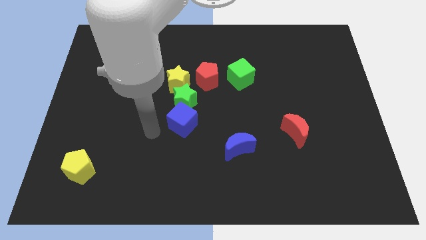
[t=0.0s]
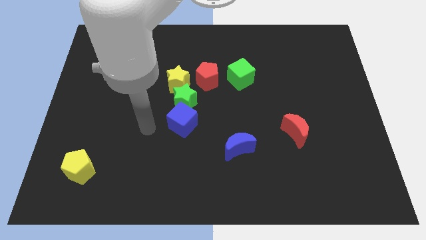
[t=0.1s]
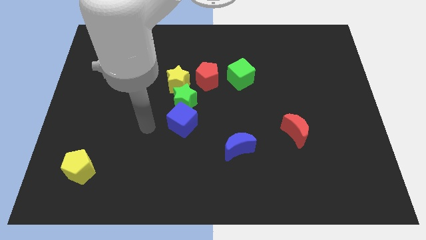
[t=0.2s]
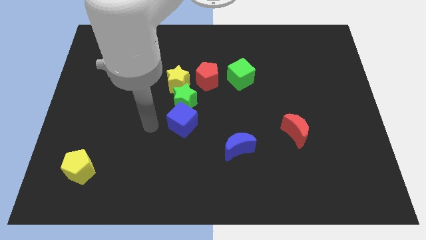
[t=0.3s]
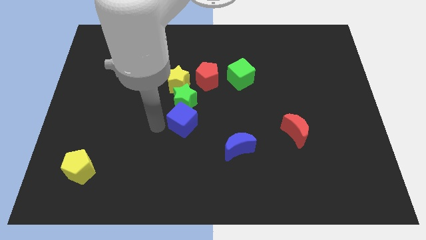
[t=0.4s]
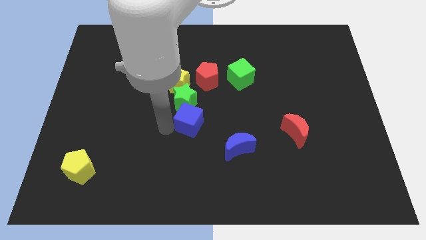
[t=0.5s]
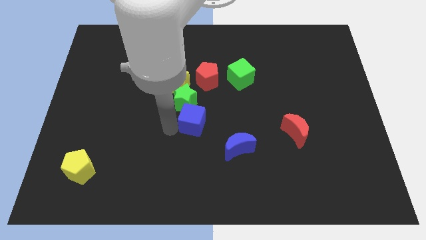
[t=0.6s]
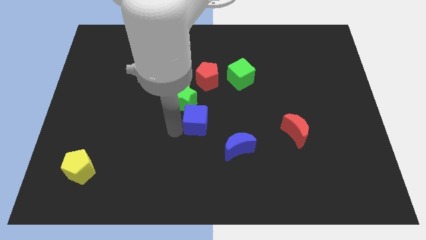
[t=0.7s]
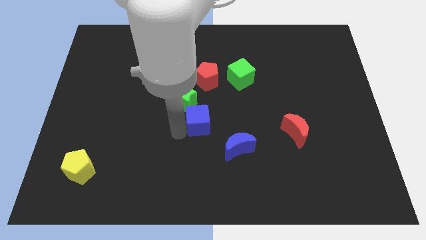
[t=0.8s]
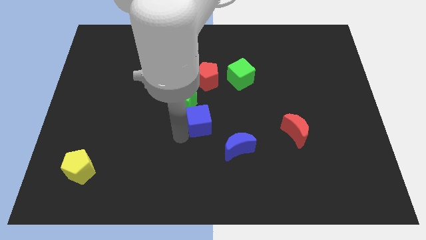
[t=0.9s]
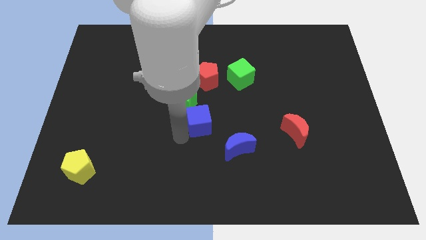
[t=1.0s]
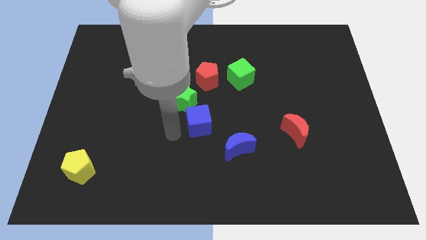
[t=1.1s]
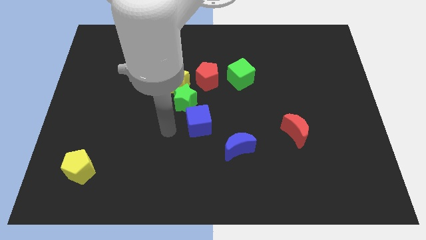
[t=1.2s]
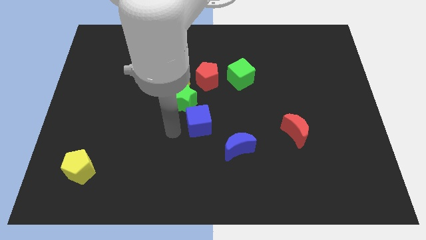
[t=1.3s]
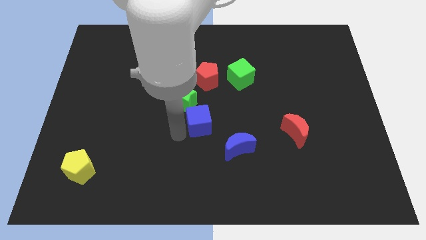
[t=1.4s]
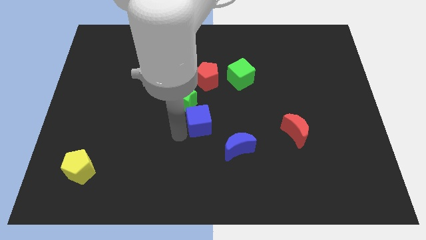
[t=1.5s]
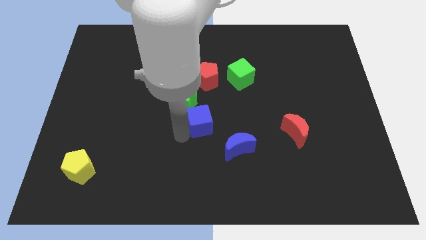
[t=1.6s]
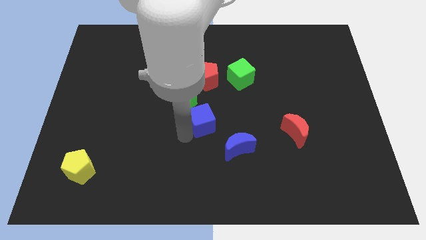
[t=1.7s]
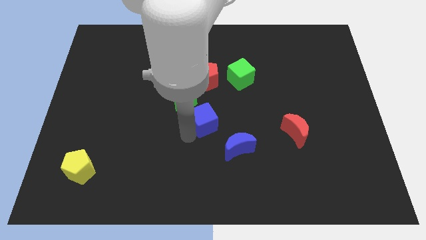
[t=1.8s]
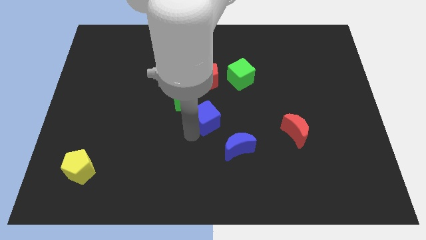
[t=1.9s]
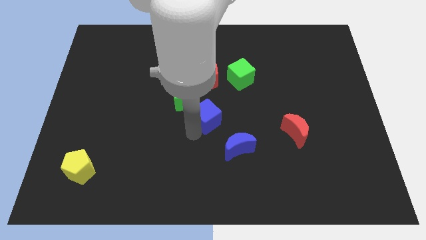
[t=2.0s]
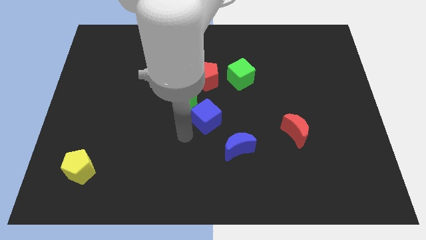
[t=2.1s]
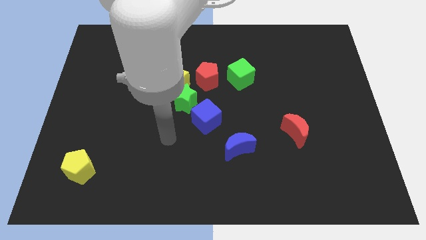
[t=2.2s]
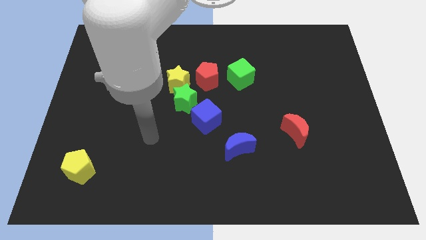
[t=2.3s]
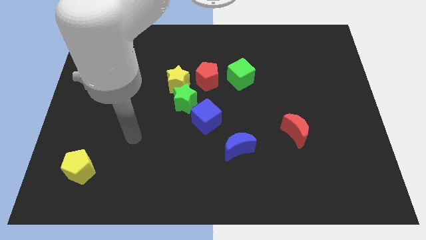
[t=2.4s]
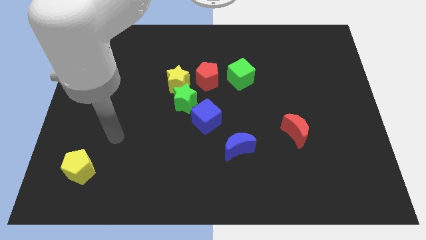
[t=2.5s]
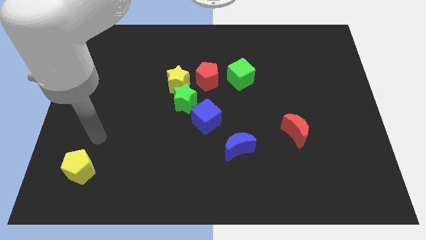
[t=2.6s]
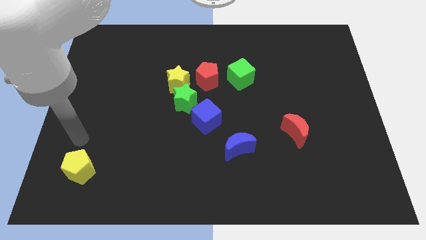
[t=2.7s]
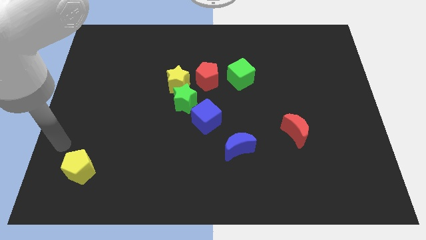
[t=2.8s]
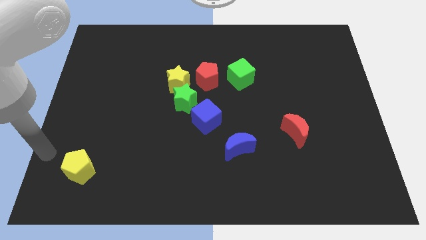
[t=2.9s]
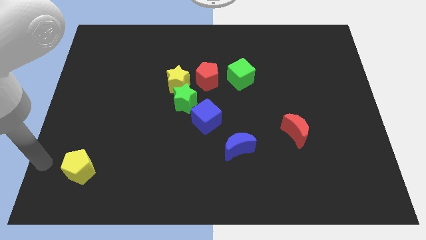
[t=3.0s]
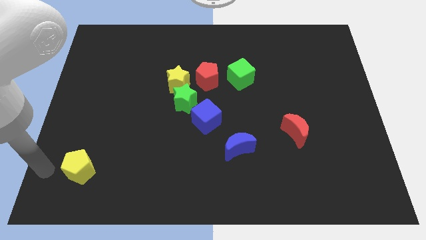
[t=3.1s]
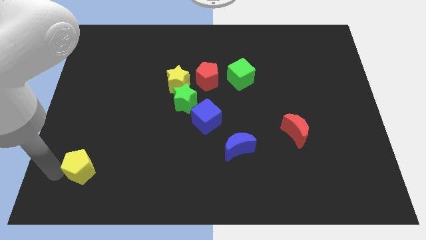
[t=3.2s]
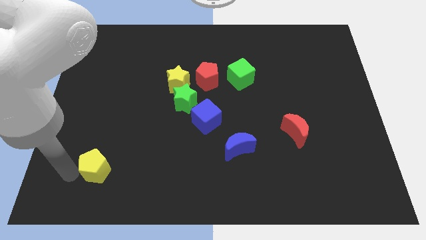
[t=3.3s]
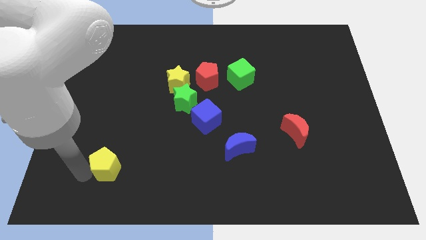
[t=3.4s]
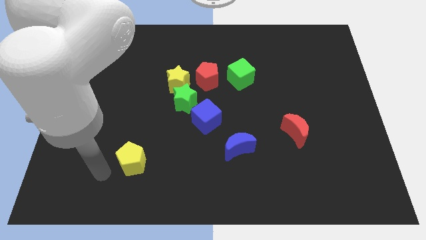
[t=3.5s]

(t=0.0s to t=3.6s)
place the blue cube diagonally in between the green star and the blue moon

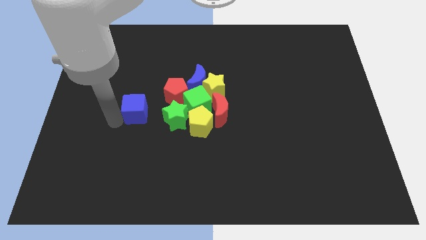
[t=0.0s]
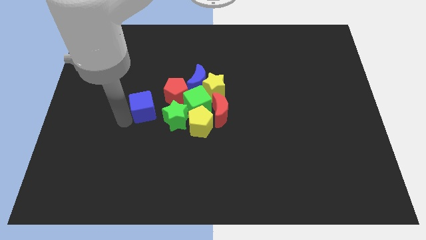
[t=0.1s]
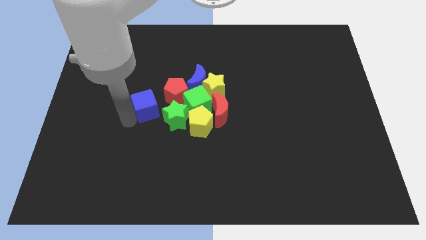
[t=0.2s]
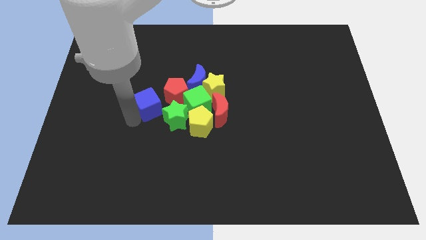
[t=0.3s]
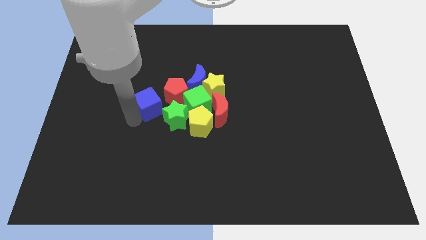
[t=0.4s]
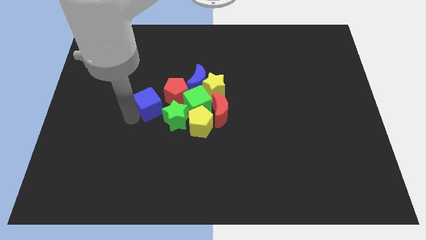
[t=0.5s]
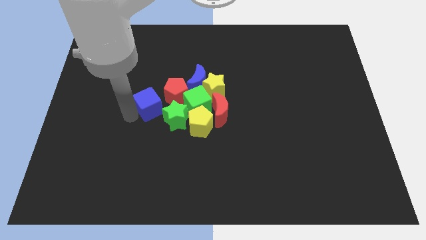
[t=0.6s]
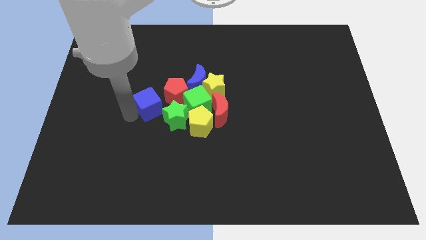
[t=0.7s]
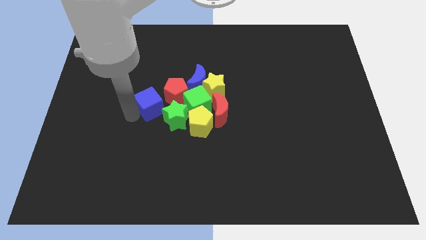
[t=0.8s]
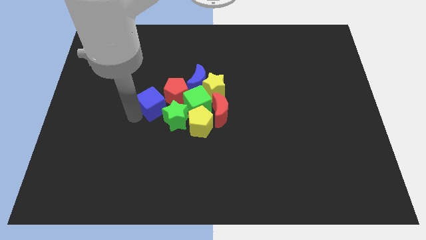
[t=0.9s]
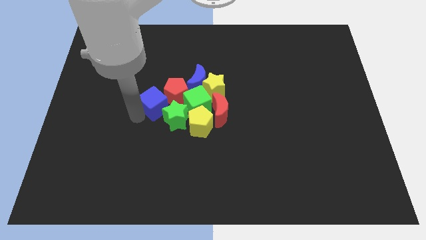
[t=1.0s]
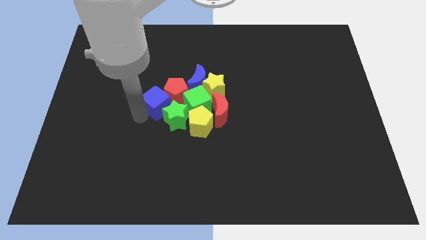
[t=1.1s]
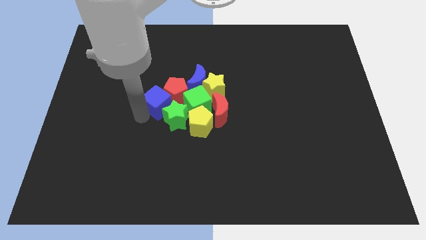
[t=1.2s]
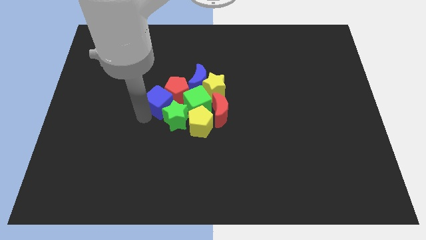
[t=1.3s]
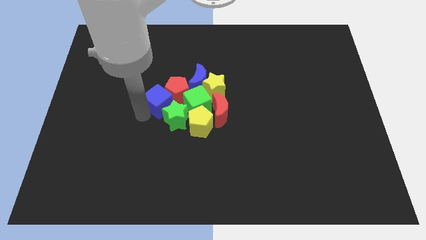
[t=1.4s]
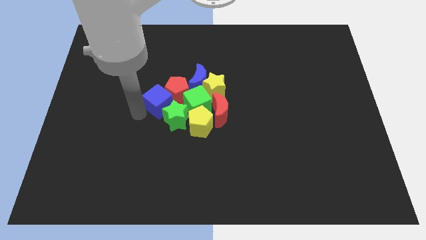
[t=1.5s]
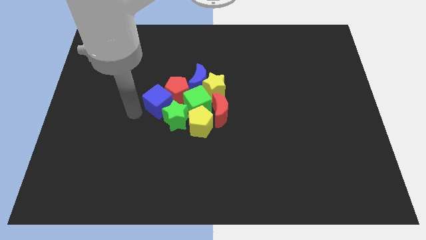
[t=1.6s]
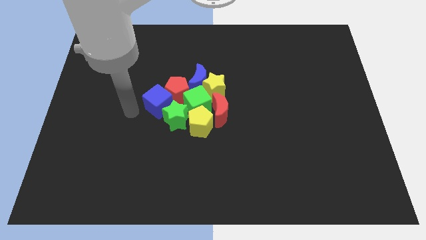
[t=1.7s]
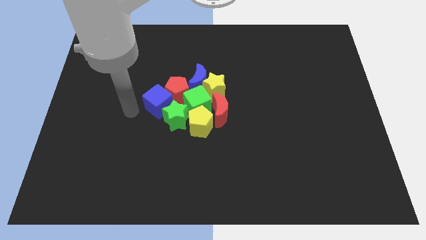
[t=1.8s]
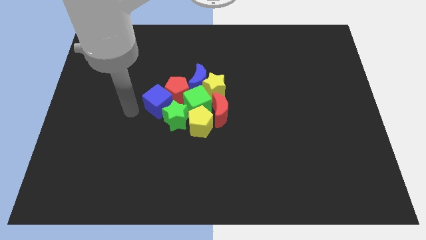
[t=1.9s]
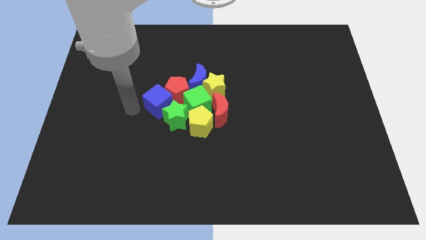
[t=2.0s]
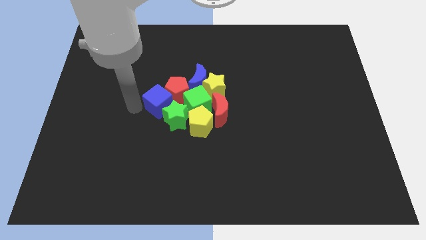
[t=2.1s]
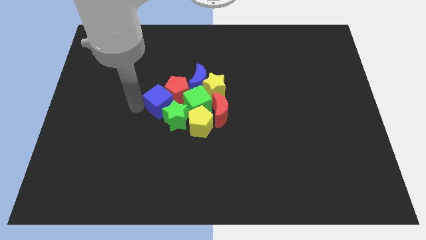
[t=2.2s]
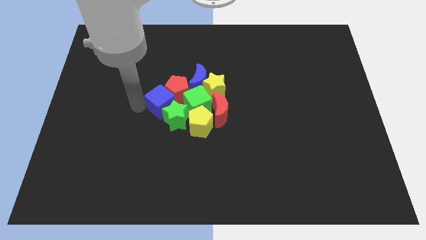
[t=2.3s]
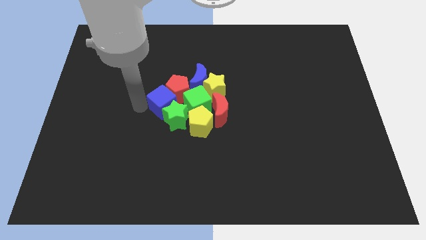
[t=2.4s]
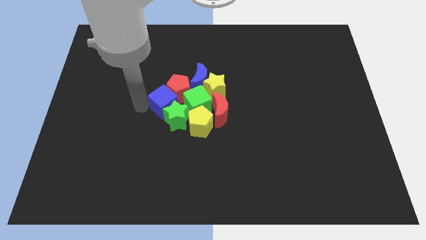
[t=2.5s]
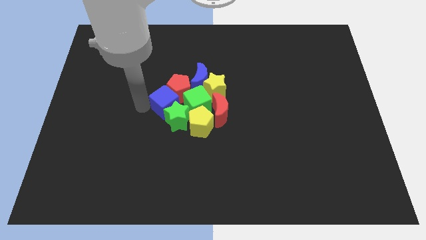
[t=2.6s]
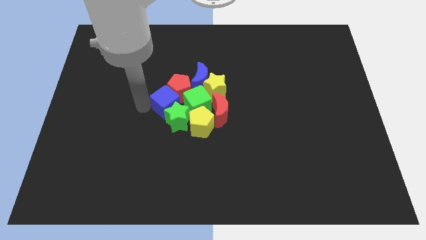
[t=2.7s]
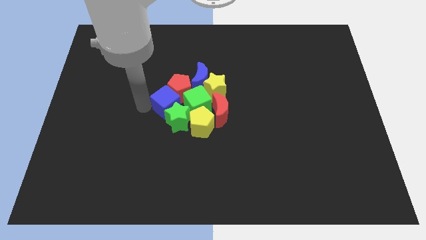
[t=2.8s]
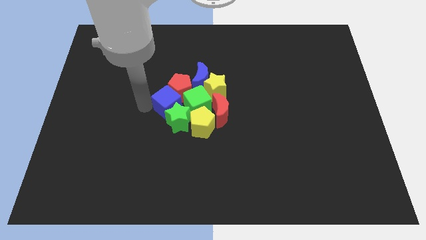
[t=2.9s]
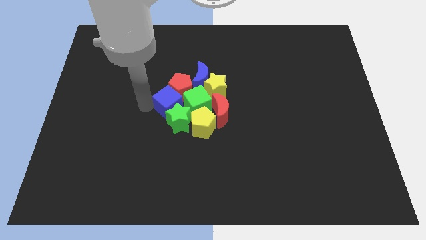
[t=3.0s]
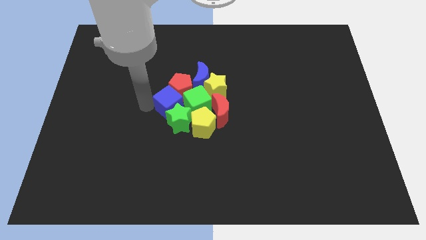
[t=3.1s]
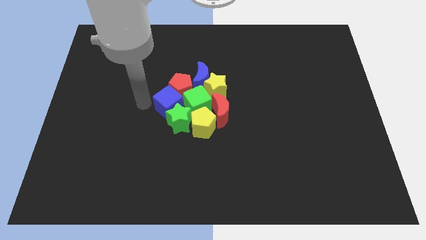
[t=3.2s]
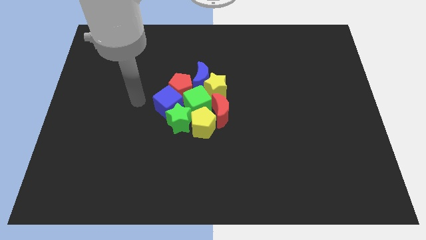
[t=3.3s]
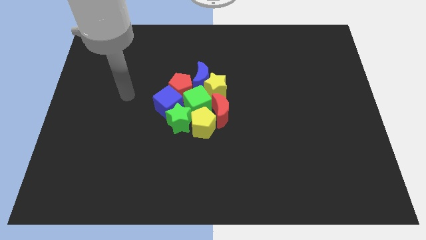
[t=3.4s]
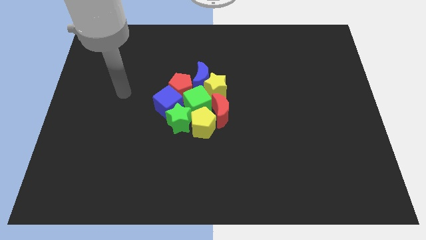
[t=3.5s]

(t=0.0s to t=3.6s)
put the blue cube left to the green cube

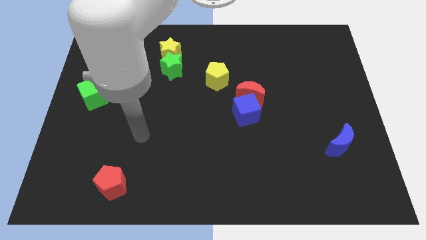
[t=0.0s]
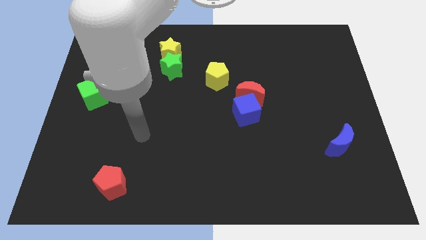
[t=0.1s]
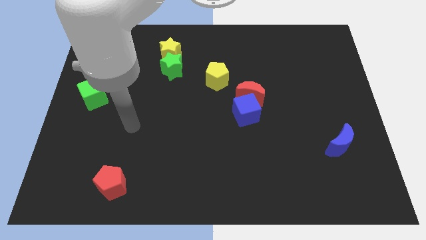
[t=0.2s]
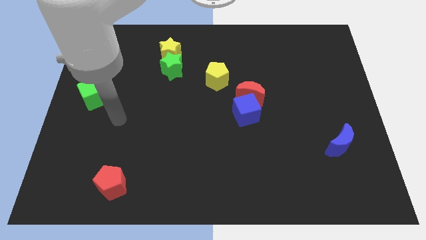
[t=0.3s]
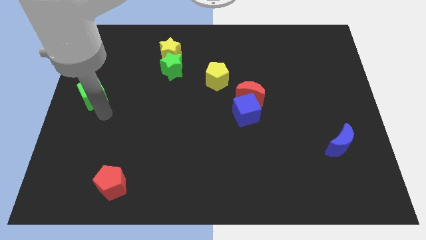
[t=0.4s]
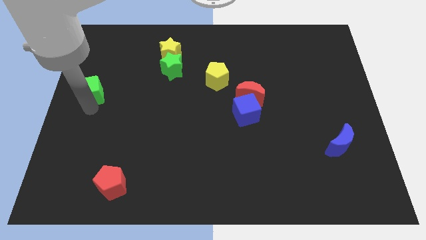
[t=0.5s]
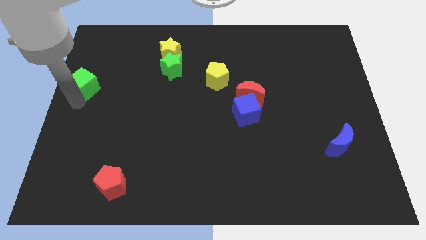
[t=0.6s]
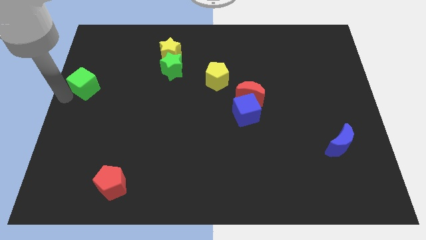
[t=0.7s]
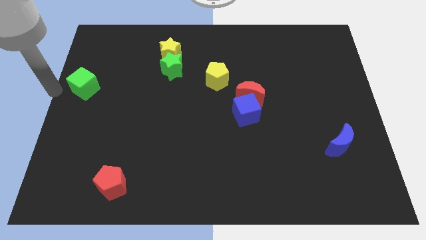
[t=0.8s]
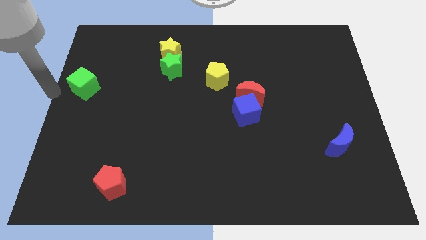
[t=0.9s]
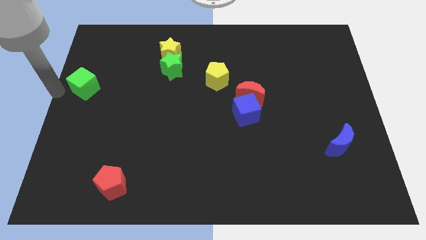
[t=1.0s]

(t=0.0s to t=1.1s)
tap on the left side of green cube

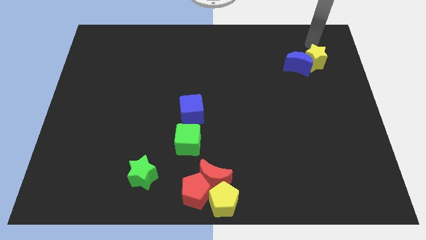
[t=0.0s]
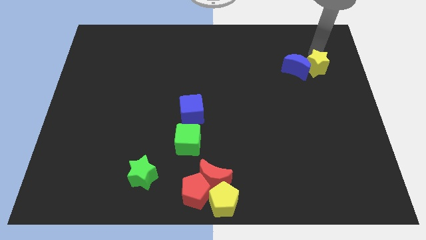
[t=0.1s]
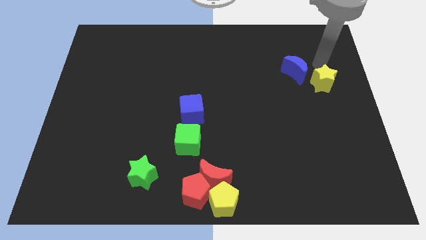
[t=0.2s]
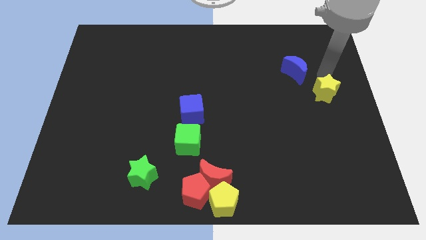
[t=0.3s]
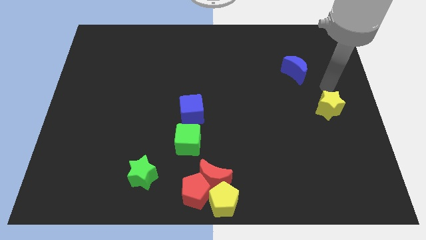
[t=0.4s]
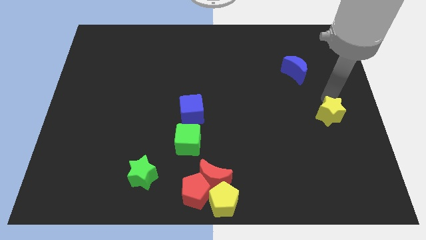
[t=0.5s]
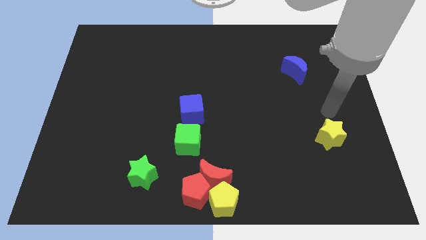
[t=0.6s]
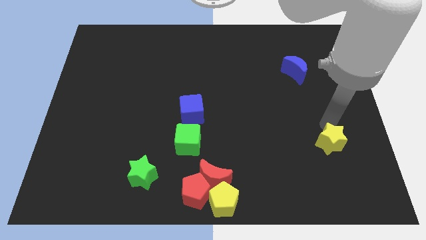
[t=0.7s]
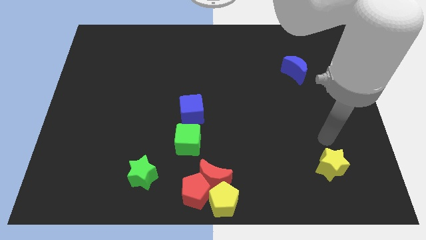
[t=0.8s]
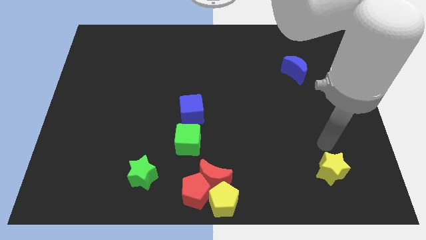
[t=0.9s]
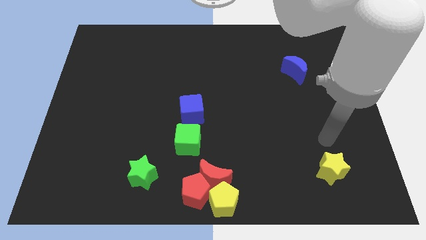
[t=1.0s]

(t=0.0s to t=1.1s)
push the yellow star towards the bottom side
